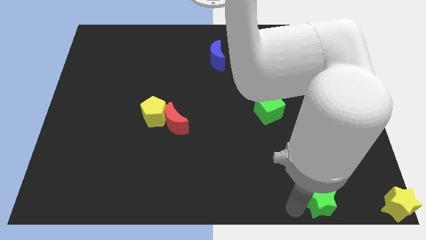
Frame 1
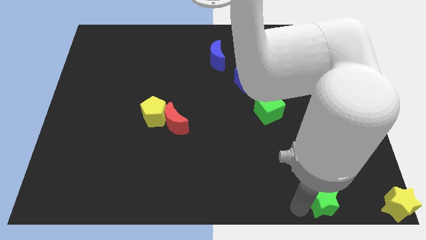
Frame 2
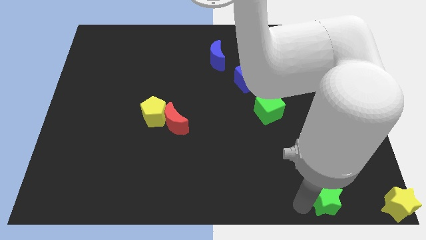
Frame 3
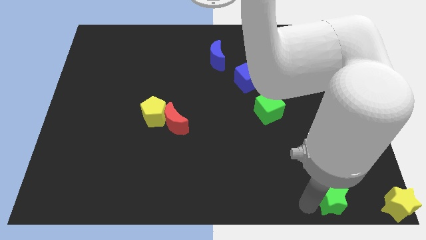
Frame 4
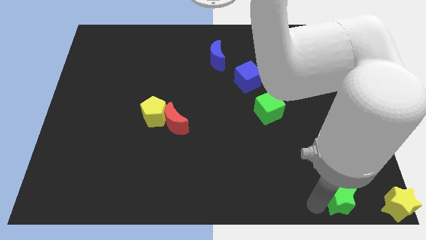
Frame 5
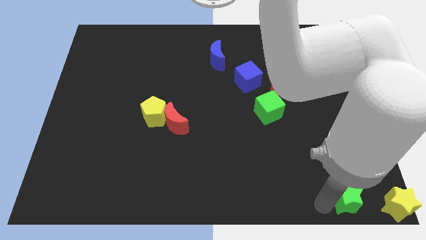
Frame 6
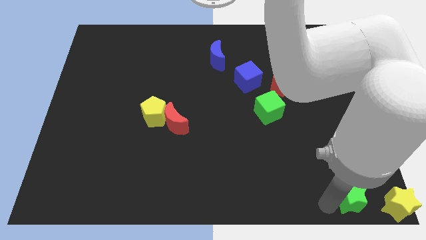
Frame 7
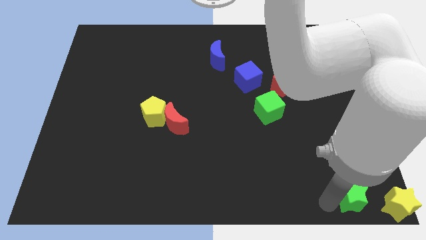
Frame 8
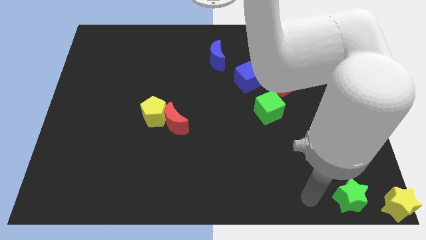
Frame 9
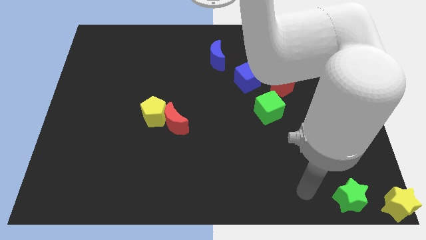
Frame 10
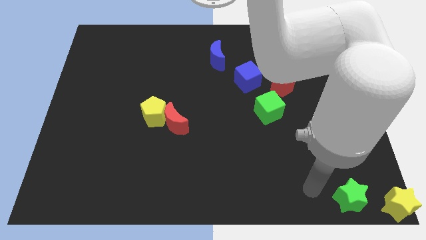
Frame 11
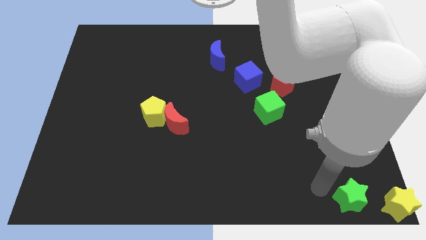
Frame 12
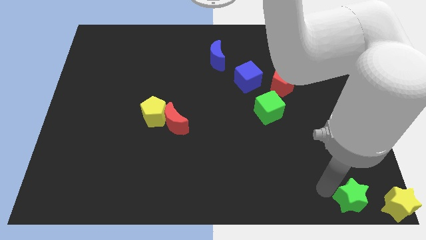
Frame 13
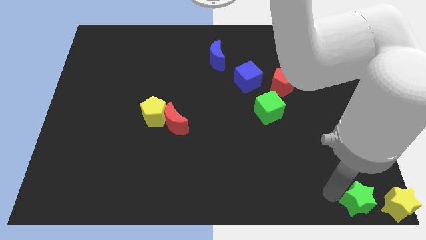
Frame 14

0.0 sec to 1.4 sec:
place the green star left to the yellow star

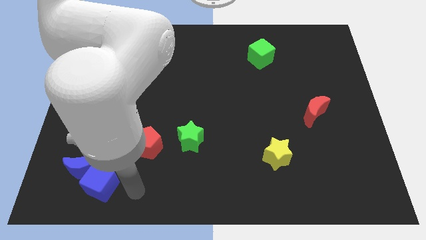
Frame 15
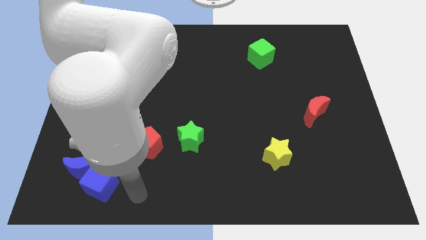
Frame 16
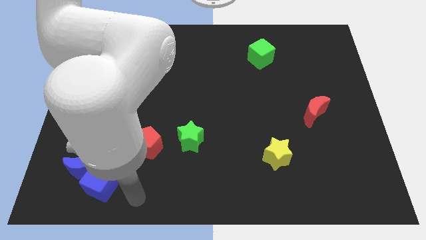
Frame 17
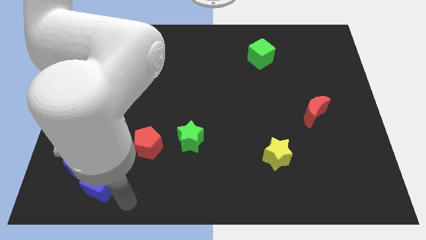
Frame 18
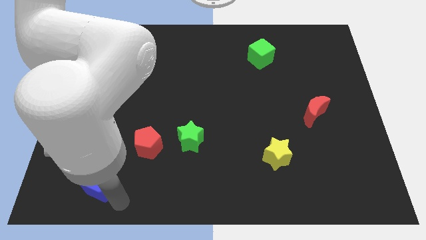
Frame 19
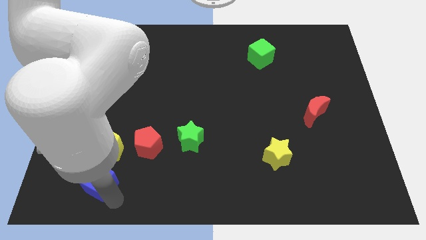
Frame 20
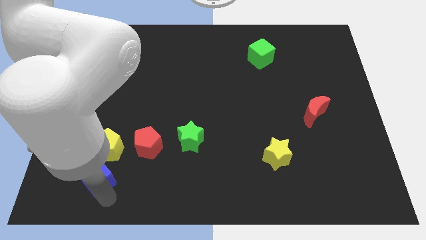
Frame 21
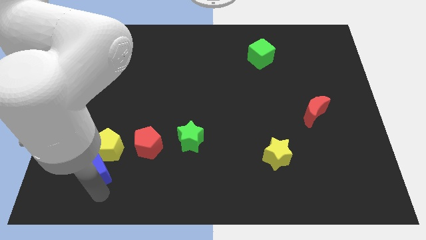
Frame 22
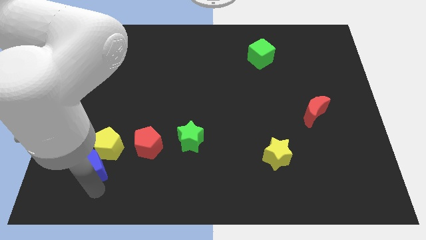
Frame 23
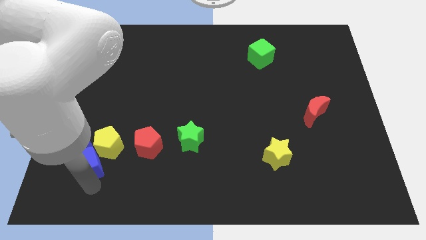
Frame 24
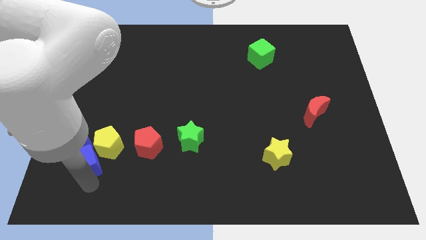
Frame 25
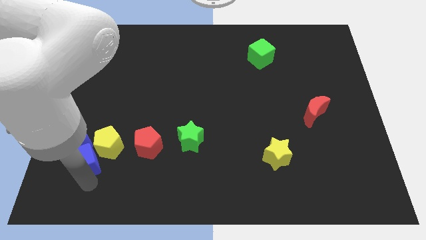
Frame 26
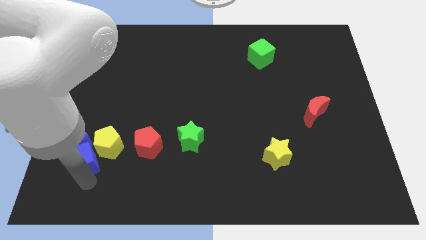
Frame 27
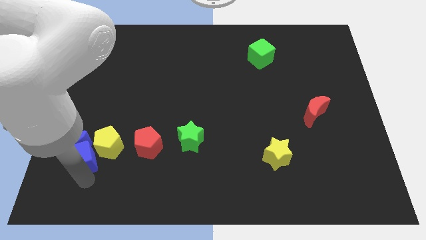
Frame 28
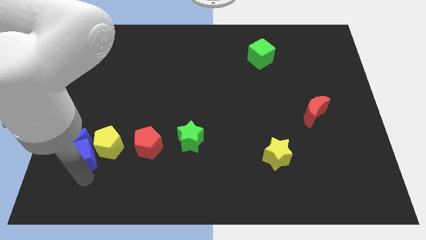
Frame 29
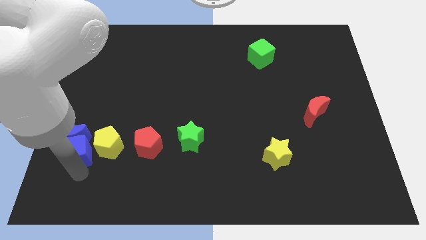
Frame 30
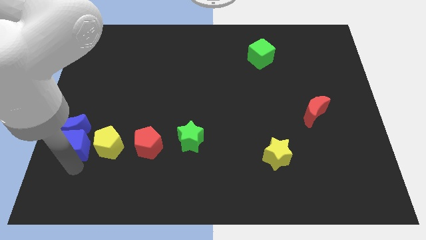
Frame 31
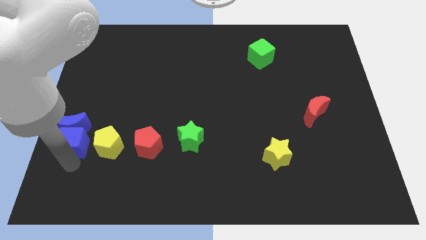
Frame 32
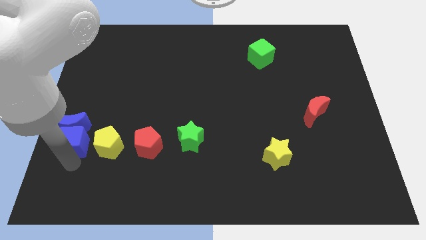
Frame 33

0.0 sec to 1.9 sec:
push the blue blocks to the top

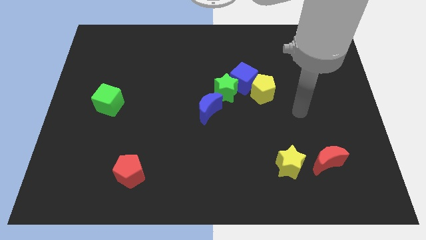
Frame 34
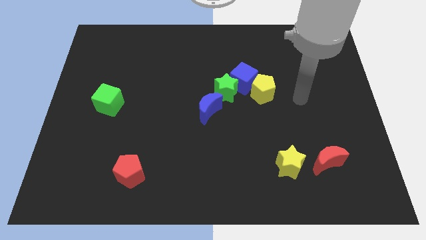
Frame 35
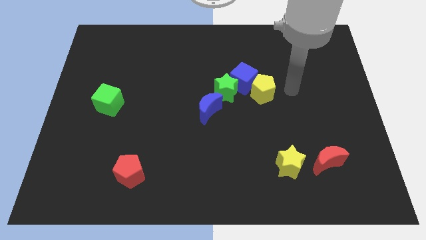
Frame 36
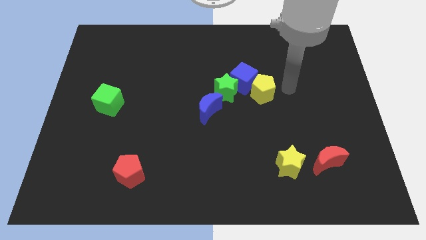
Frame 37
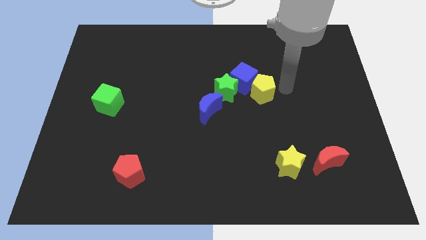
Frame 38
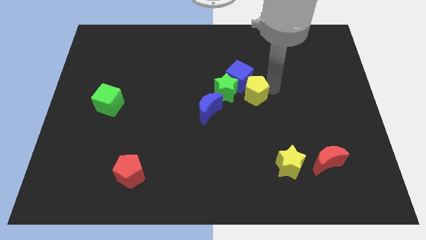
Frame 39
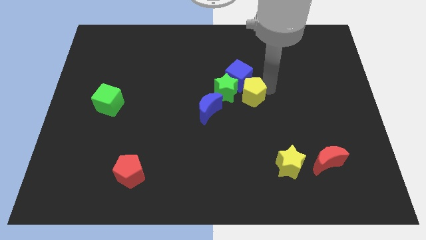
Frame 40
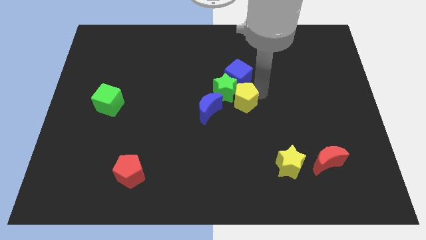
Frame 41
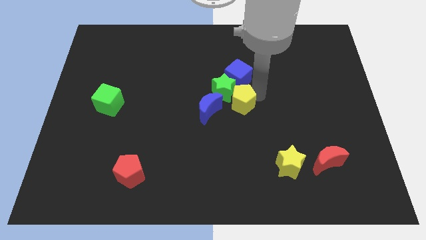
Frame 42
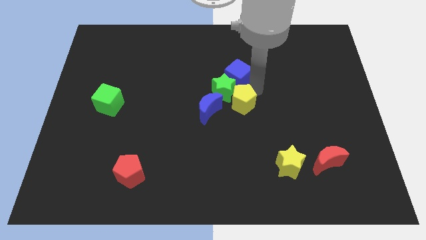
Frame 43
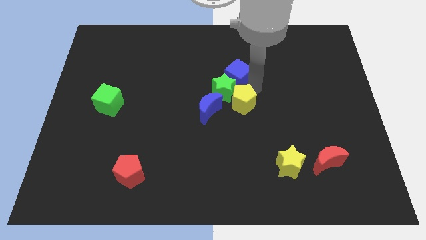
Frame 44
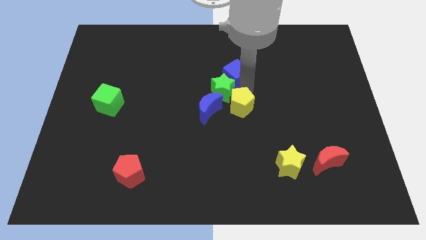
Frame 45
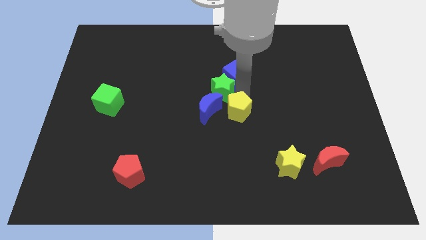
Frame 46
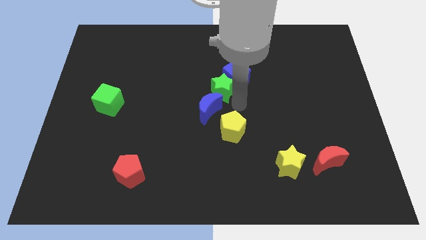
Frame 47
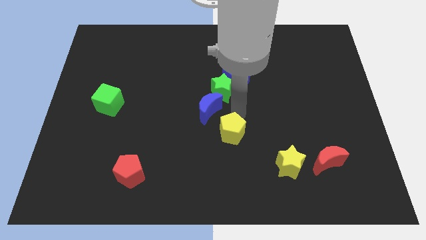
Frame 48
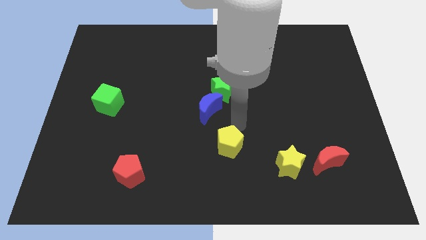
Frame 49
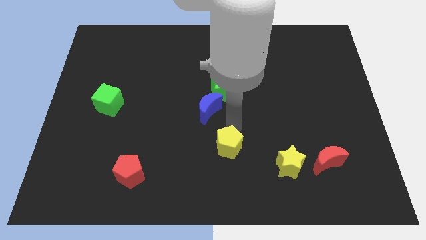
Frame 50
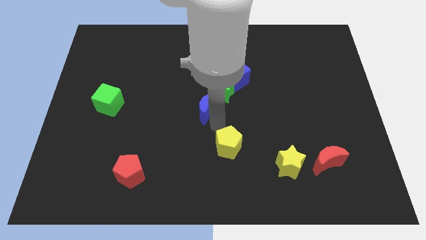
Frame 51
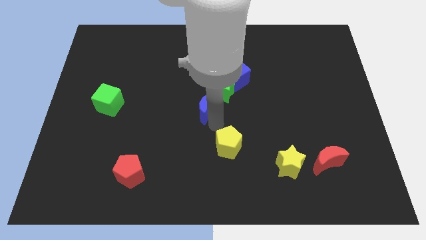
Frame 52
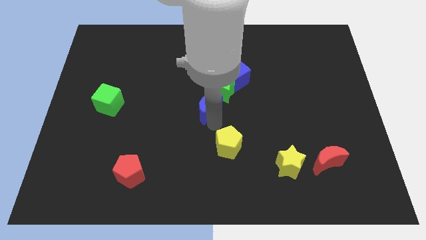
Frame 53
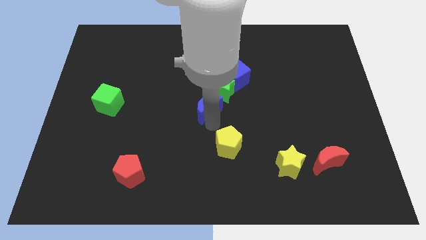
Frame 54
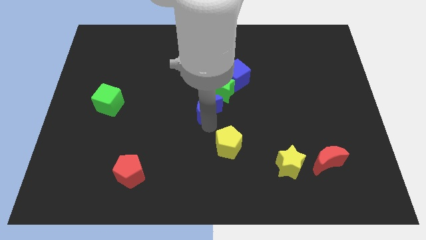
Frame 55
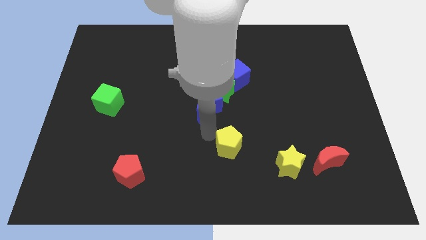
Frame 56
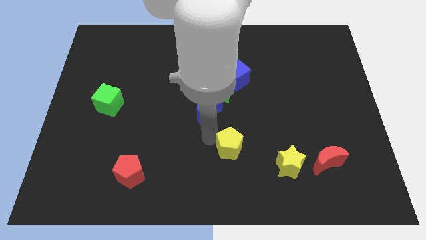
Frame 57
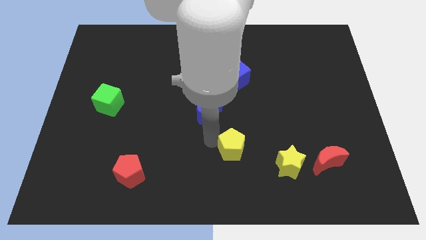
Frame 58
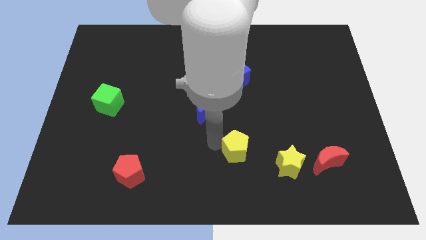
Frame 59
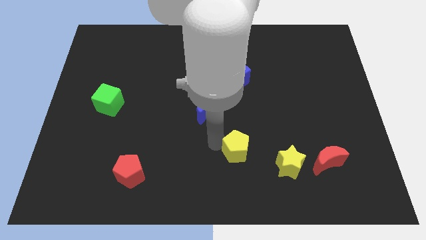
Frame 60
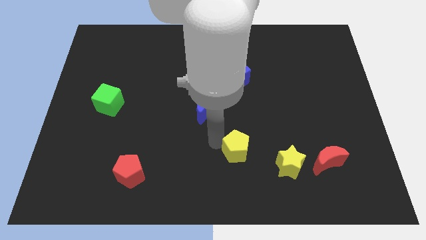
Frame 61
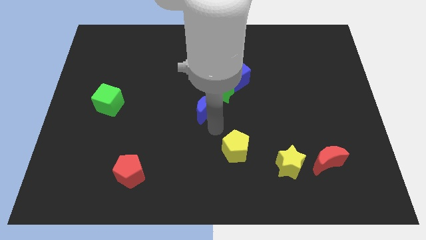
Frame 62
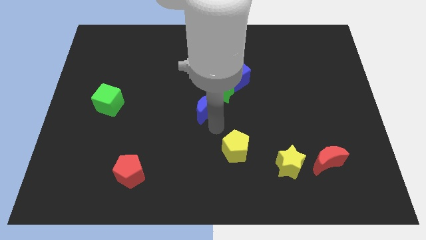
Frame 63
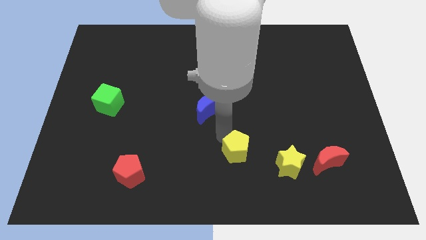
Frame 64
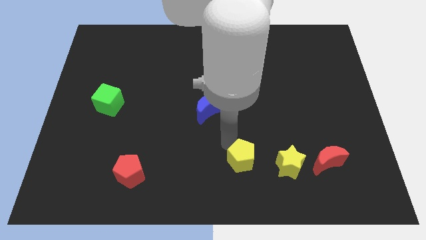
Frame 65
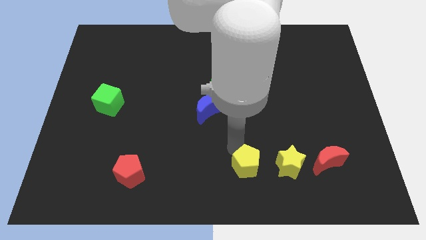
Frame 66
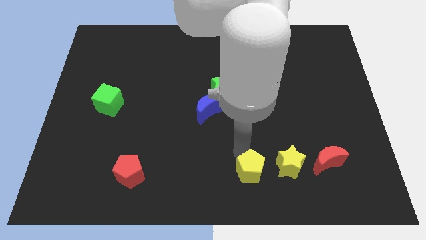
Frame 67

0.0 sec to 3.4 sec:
move the yellow pentagon towards the yellow star

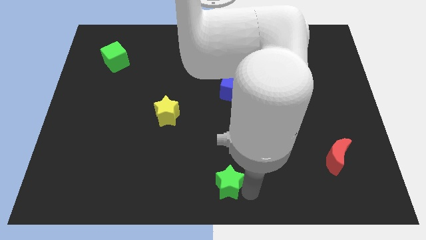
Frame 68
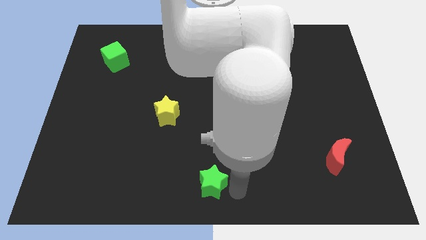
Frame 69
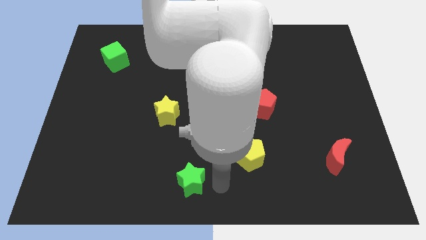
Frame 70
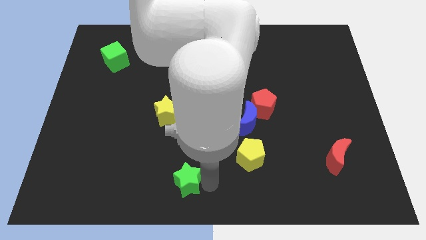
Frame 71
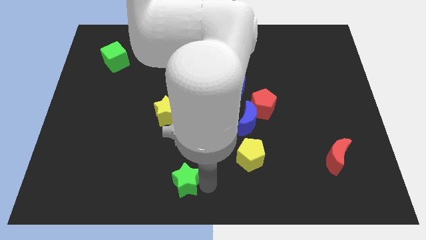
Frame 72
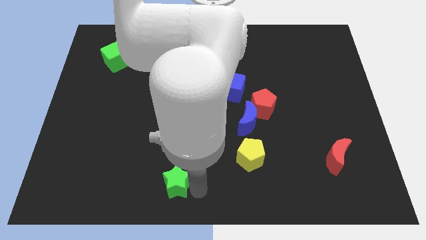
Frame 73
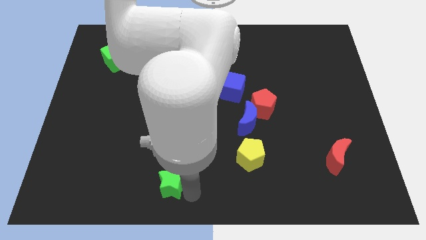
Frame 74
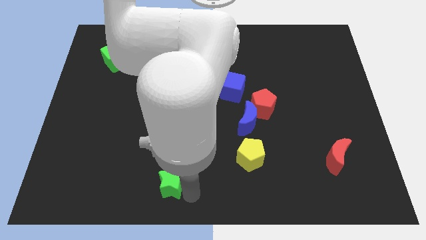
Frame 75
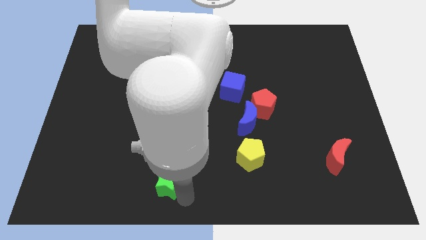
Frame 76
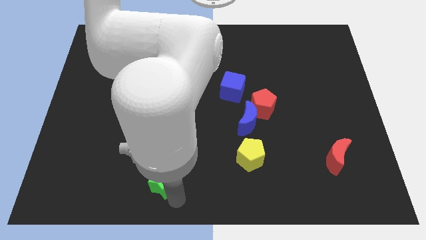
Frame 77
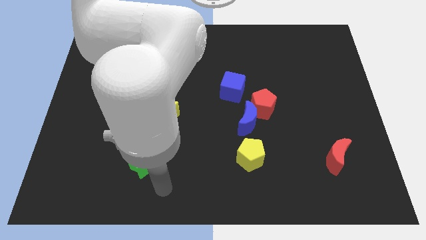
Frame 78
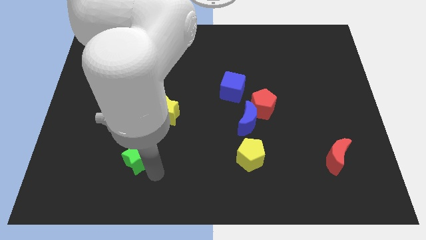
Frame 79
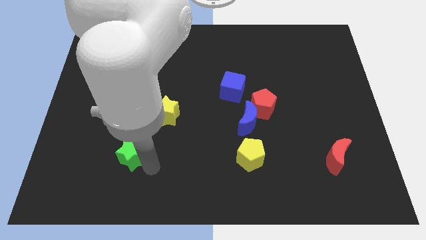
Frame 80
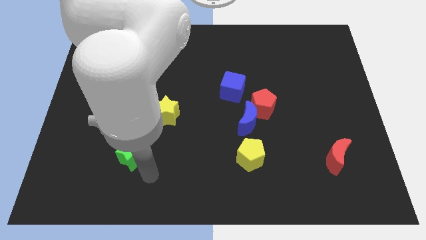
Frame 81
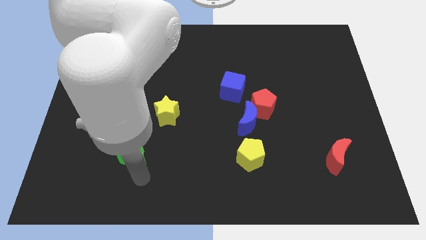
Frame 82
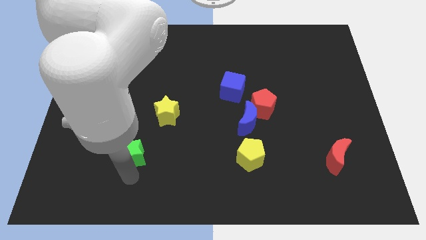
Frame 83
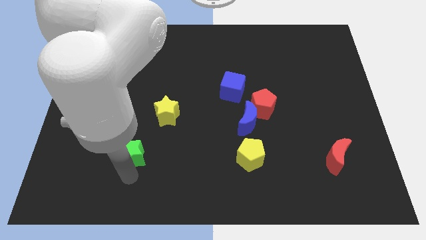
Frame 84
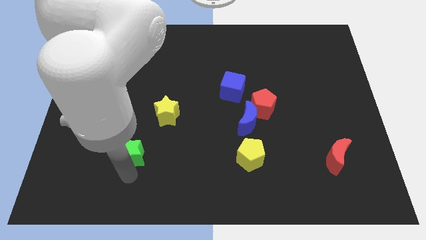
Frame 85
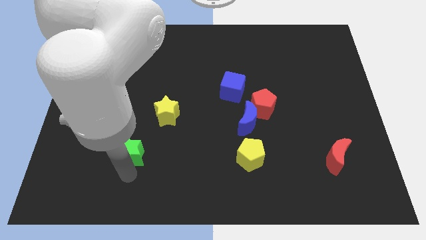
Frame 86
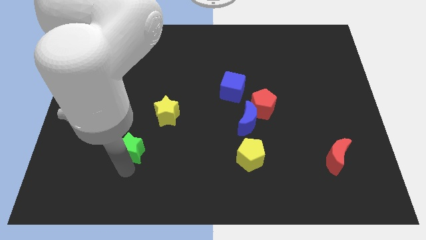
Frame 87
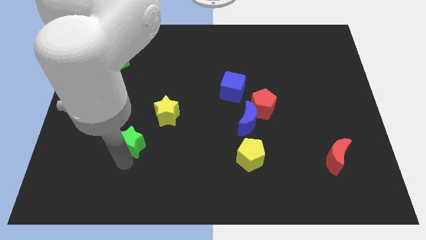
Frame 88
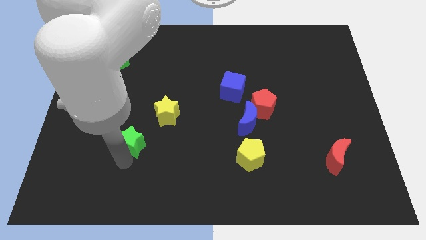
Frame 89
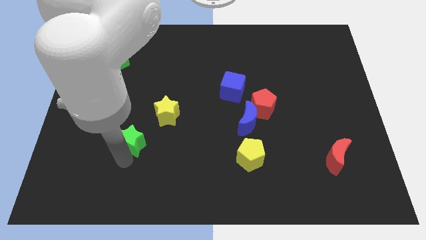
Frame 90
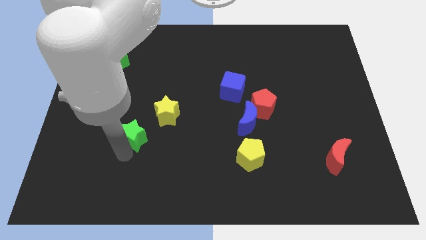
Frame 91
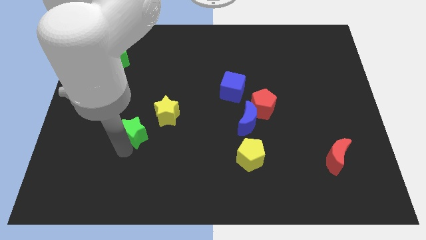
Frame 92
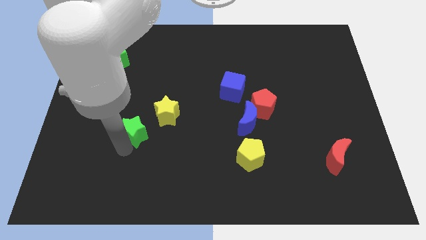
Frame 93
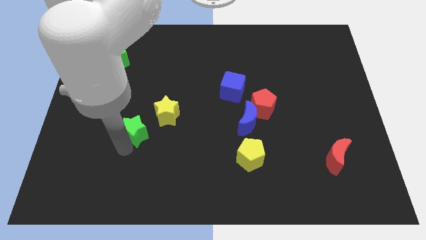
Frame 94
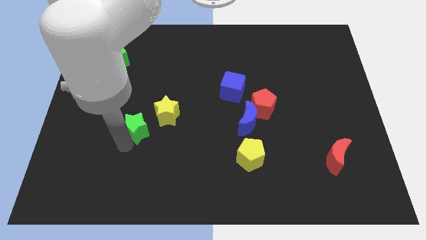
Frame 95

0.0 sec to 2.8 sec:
place green star to the bottom left of yellow star
